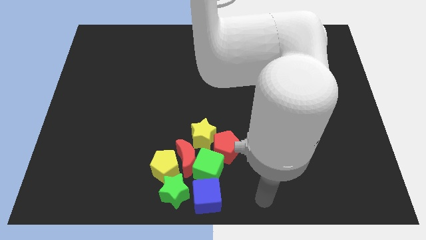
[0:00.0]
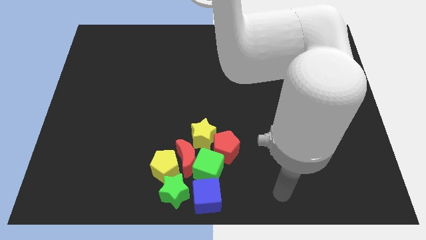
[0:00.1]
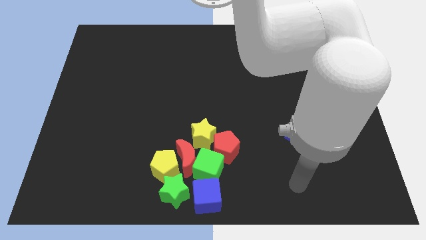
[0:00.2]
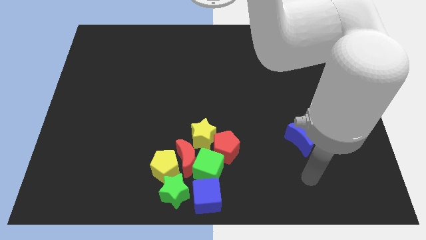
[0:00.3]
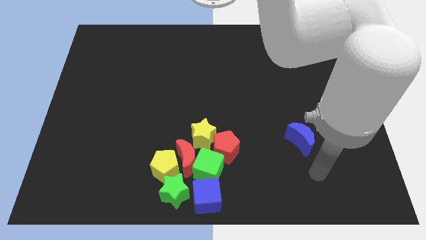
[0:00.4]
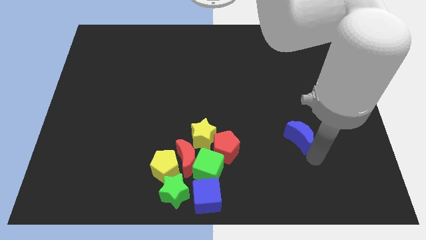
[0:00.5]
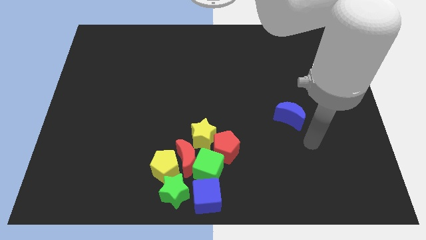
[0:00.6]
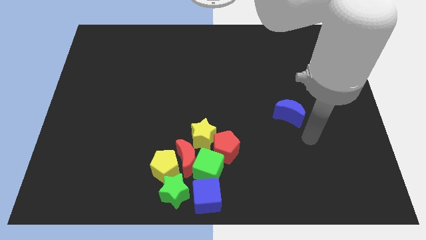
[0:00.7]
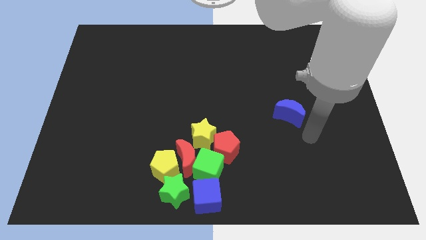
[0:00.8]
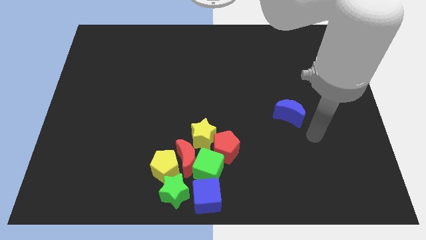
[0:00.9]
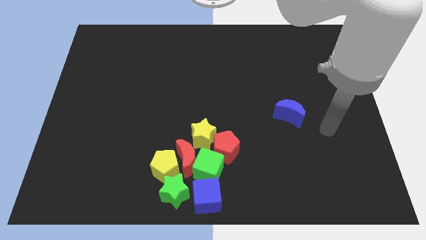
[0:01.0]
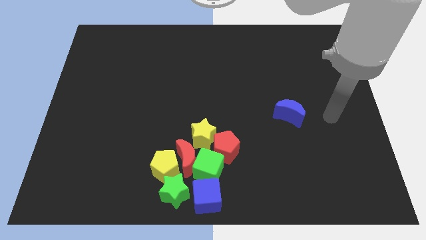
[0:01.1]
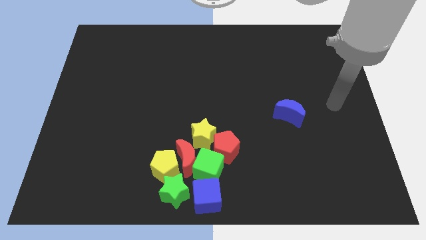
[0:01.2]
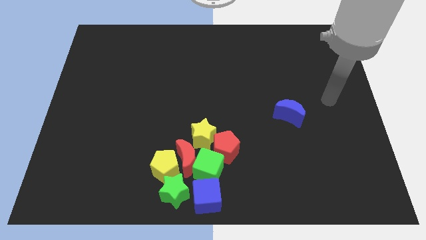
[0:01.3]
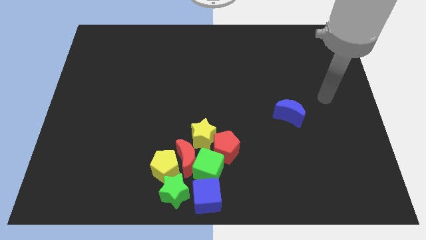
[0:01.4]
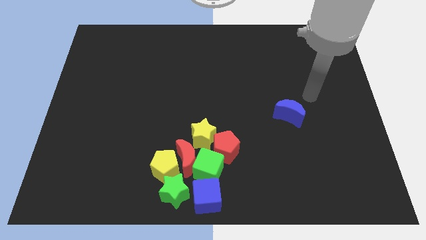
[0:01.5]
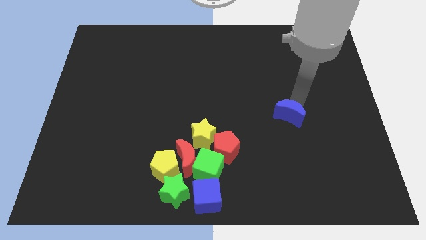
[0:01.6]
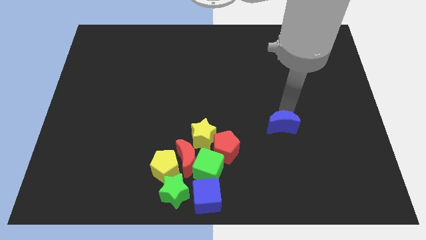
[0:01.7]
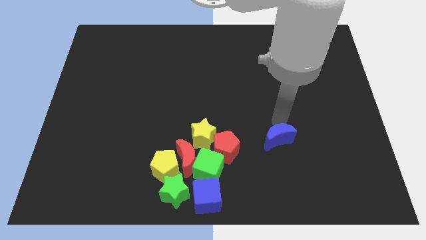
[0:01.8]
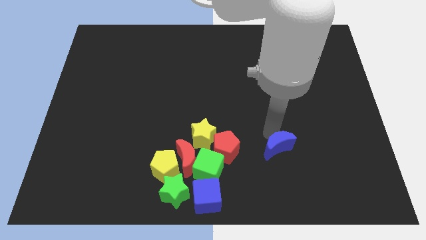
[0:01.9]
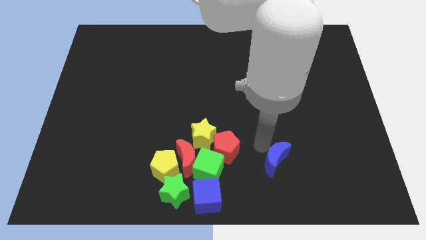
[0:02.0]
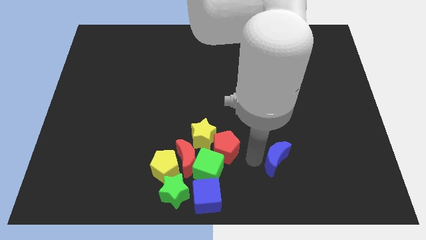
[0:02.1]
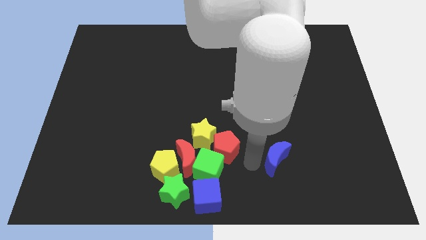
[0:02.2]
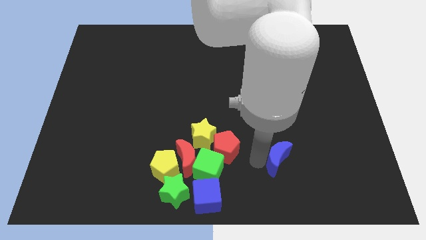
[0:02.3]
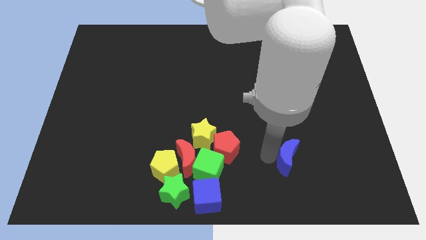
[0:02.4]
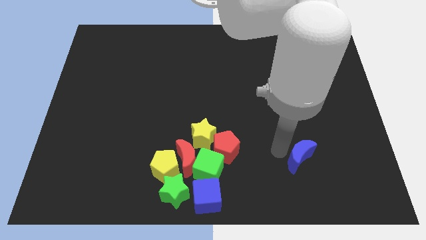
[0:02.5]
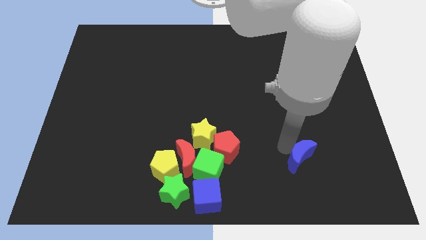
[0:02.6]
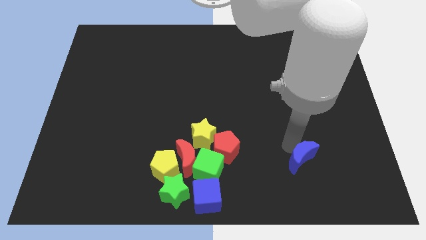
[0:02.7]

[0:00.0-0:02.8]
move the blue moon slightly down to the board

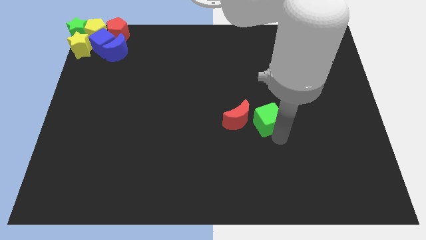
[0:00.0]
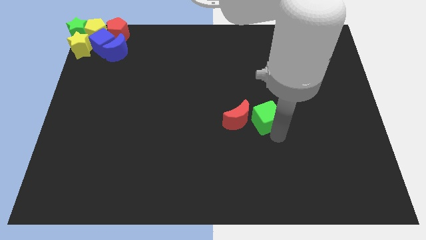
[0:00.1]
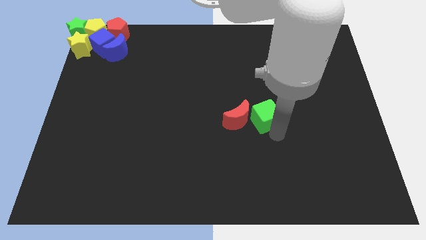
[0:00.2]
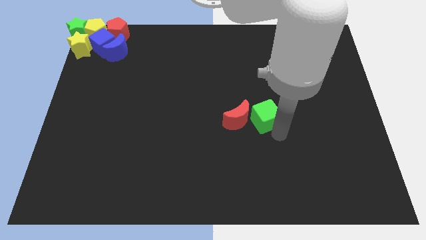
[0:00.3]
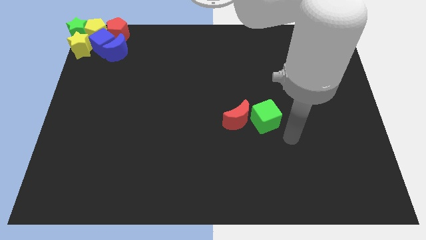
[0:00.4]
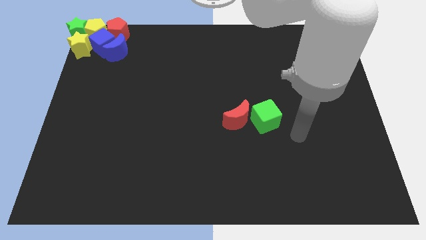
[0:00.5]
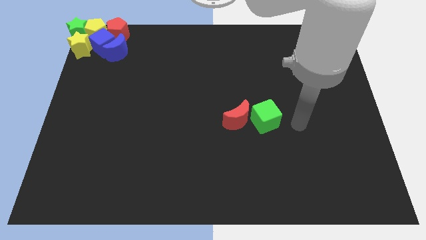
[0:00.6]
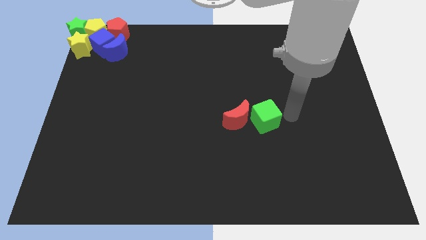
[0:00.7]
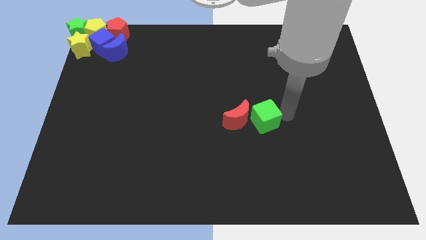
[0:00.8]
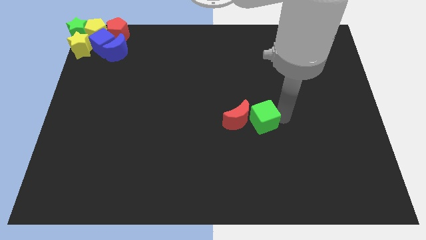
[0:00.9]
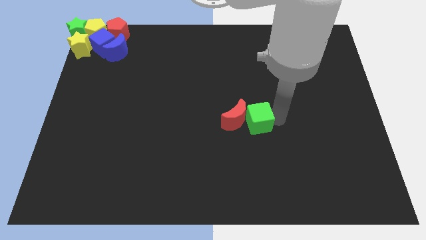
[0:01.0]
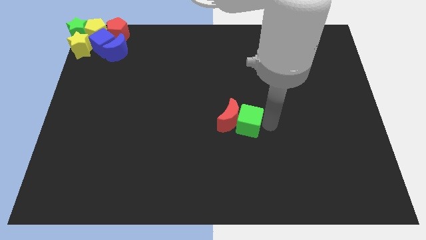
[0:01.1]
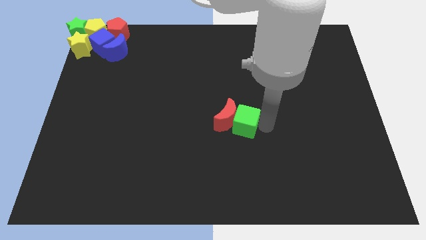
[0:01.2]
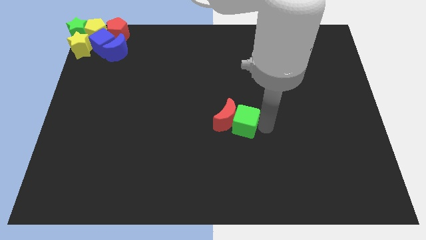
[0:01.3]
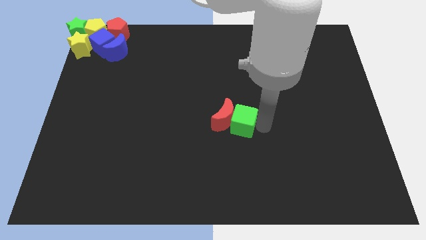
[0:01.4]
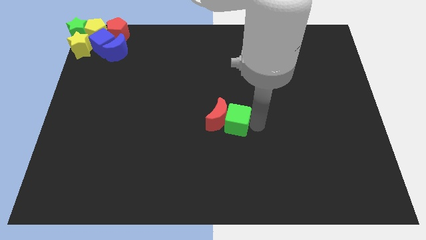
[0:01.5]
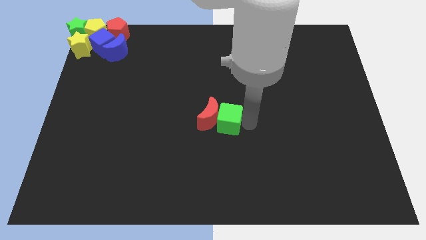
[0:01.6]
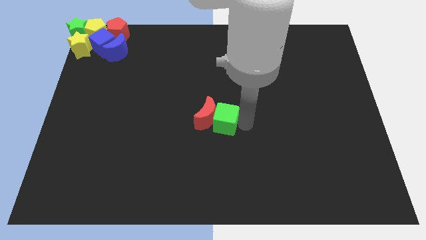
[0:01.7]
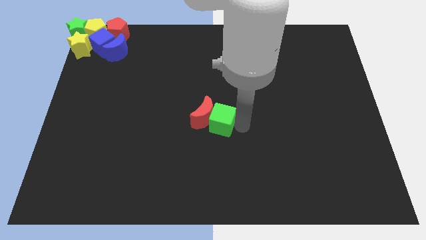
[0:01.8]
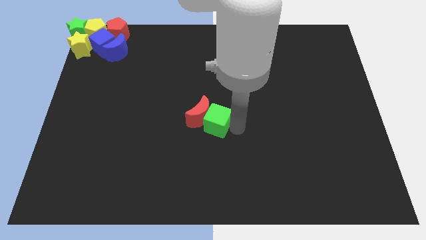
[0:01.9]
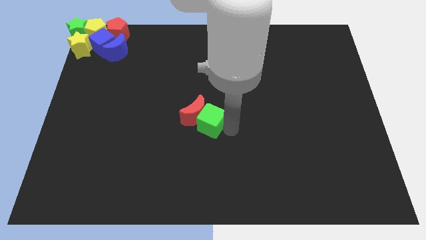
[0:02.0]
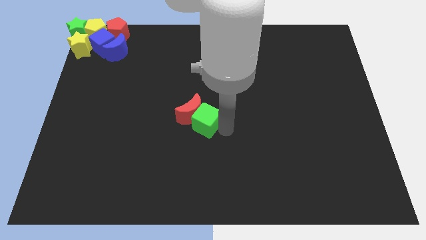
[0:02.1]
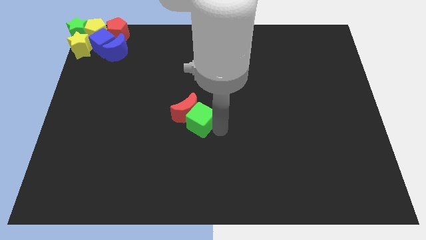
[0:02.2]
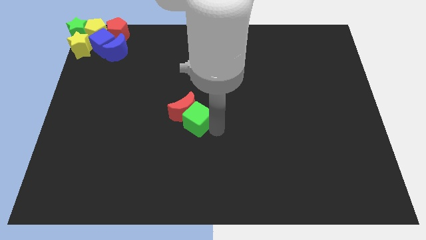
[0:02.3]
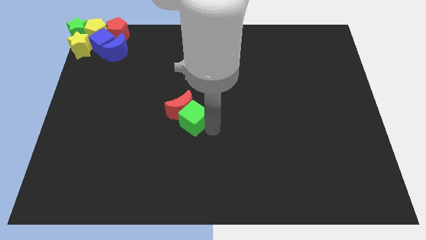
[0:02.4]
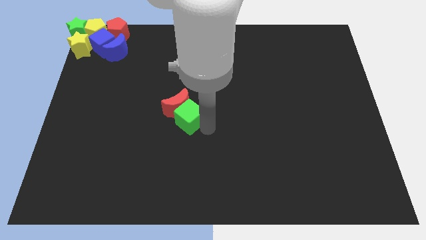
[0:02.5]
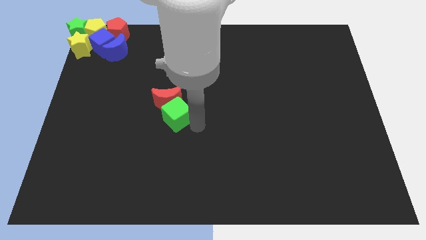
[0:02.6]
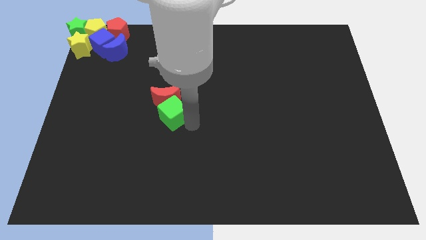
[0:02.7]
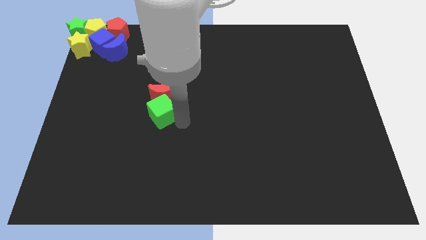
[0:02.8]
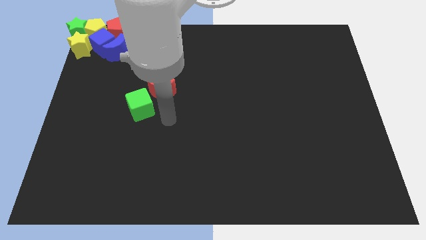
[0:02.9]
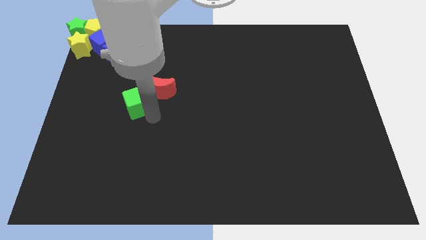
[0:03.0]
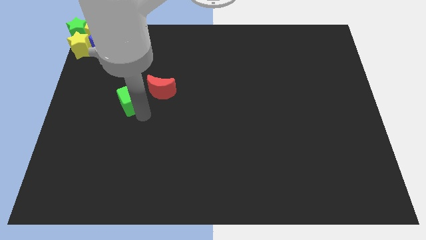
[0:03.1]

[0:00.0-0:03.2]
move the green cube and red crescent towards the group of blocks

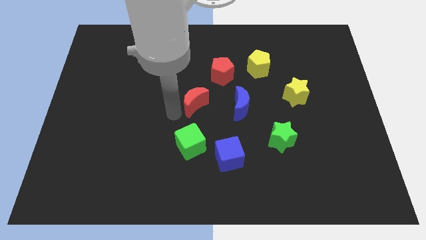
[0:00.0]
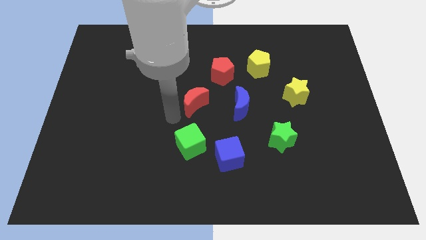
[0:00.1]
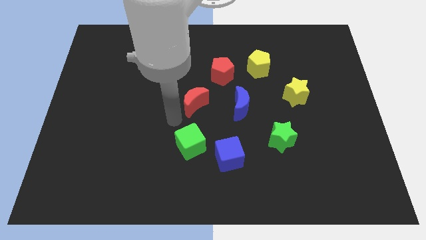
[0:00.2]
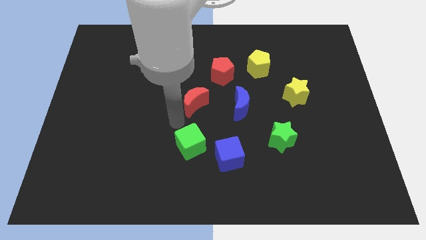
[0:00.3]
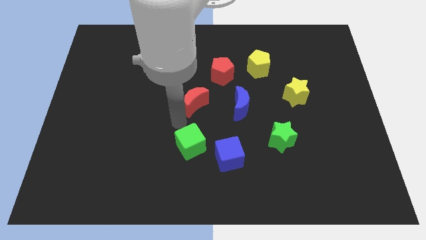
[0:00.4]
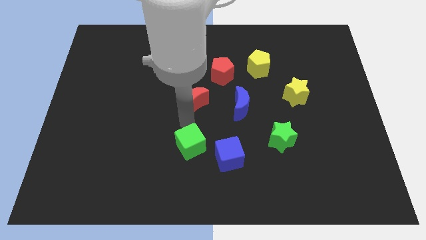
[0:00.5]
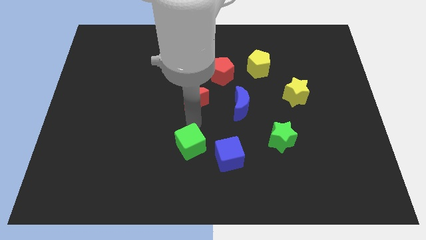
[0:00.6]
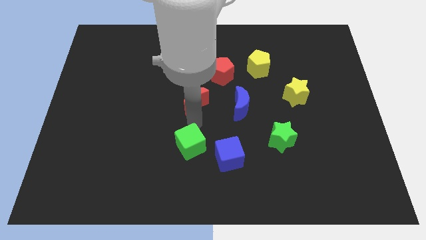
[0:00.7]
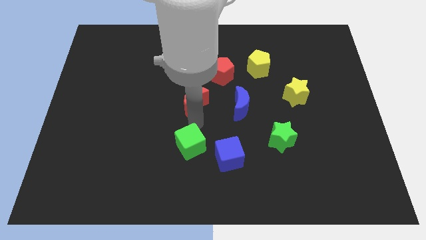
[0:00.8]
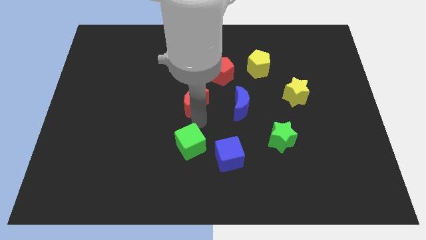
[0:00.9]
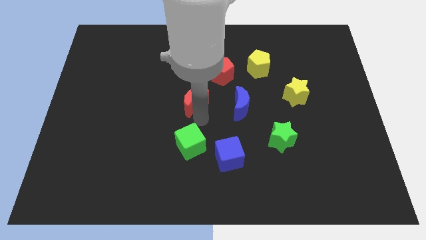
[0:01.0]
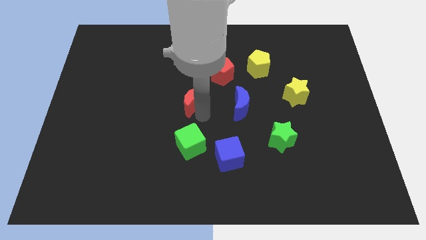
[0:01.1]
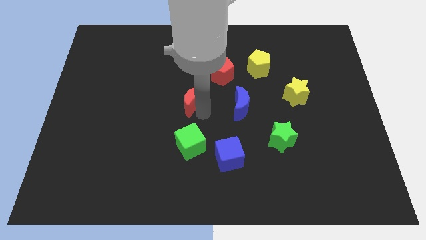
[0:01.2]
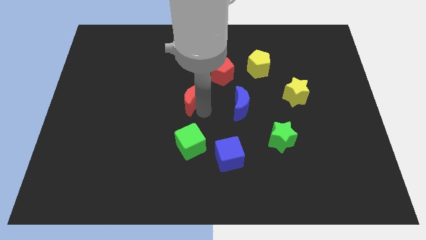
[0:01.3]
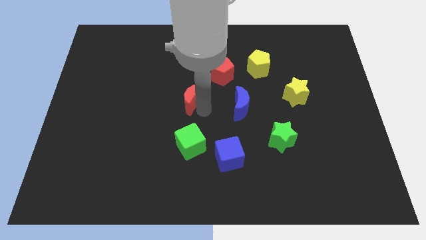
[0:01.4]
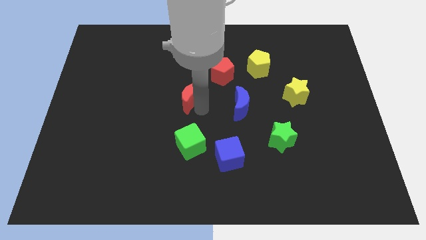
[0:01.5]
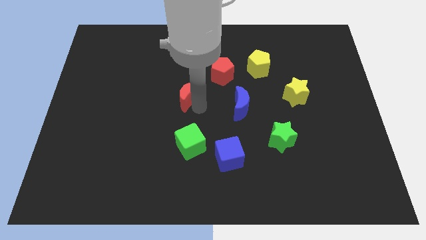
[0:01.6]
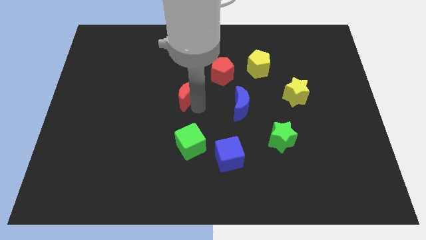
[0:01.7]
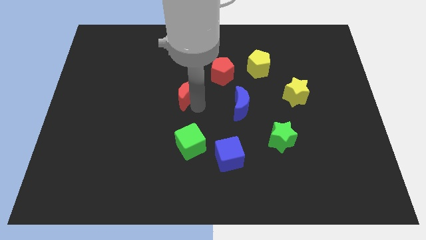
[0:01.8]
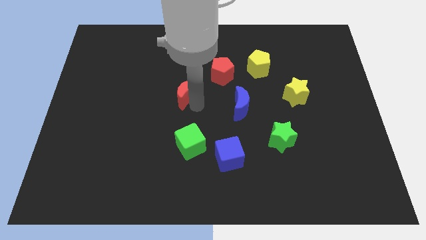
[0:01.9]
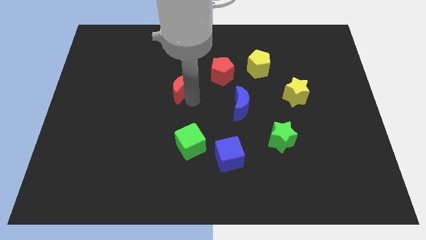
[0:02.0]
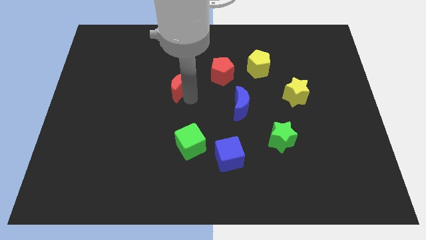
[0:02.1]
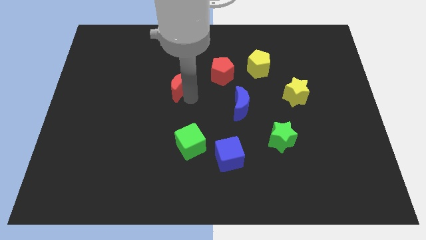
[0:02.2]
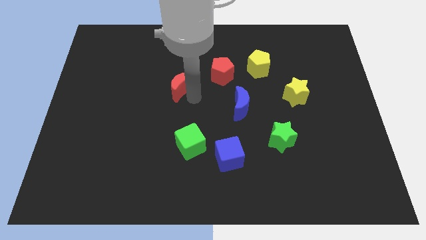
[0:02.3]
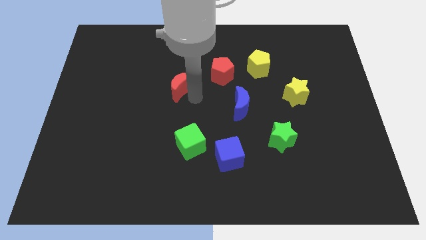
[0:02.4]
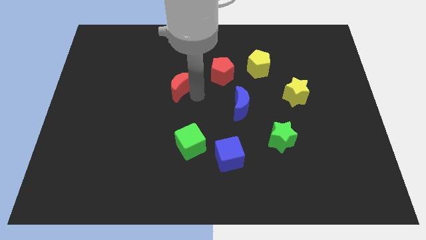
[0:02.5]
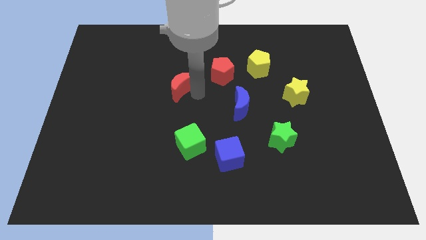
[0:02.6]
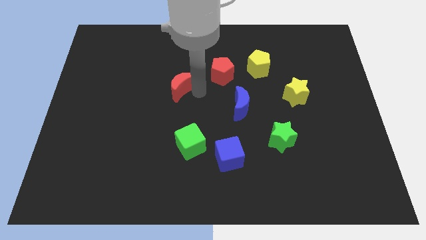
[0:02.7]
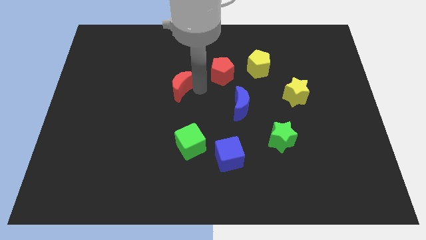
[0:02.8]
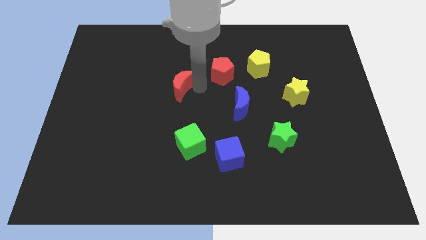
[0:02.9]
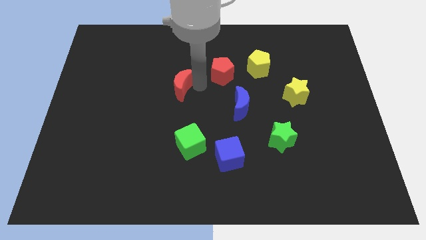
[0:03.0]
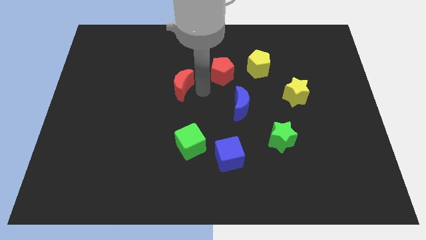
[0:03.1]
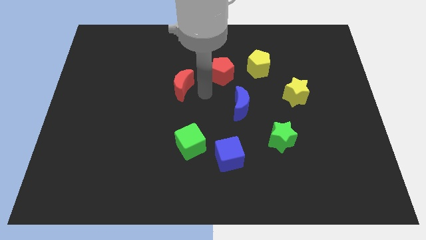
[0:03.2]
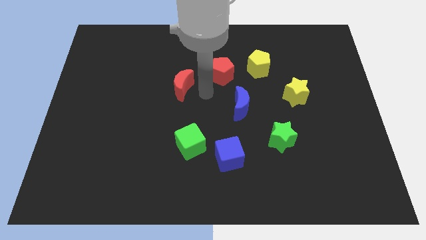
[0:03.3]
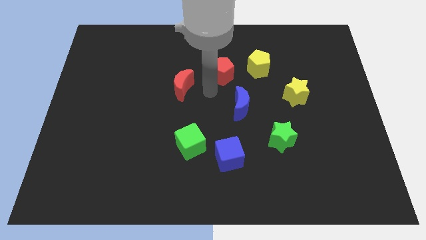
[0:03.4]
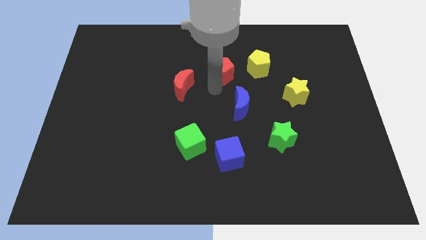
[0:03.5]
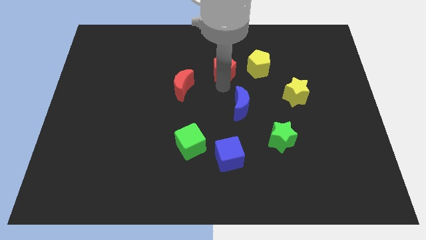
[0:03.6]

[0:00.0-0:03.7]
move the red crescent slightly to top left side
